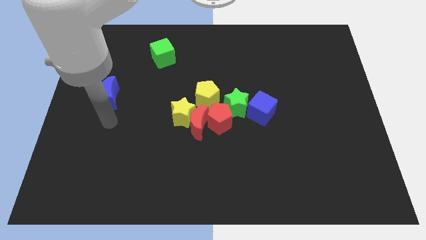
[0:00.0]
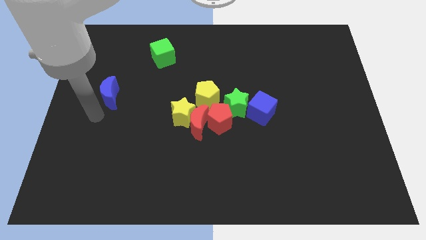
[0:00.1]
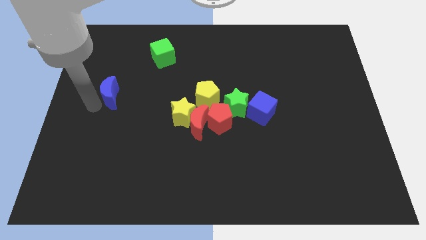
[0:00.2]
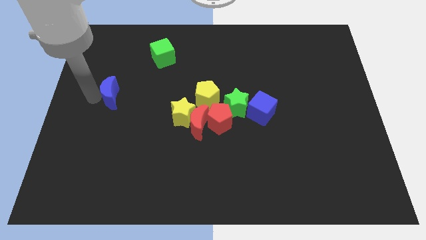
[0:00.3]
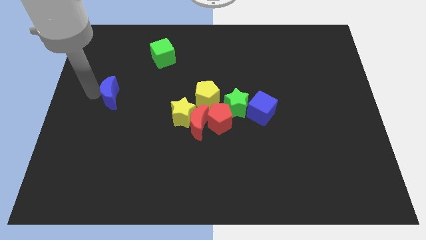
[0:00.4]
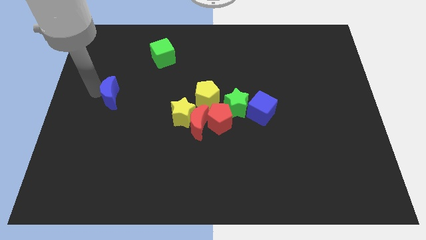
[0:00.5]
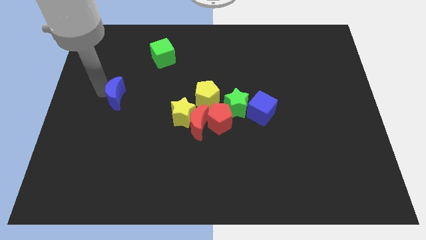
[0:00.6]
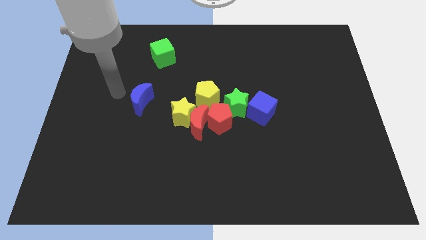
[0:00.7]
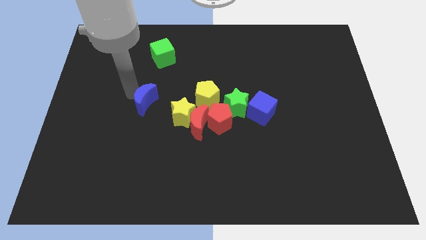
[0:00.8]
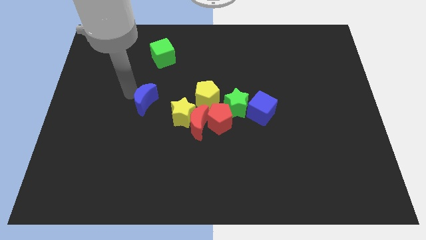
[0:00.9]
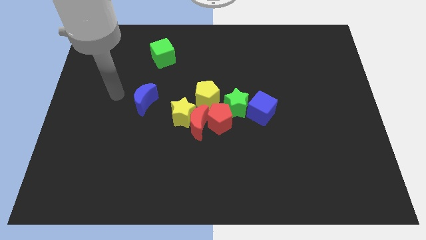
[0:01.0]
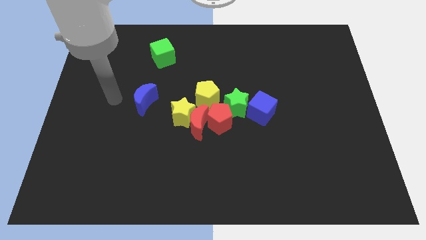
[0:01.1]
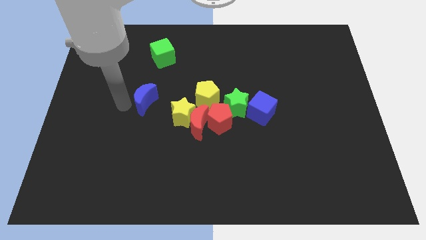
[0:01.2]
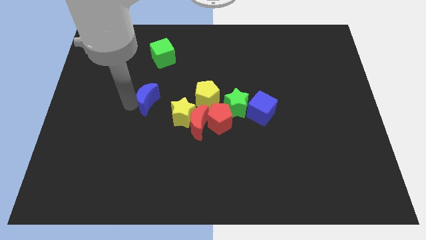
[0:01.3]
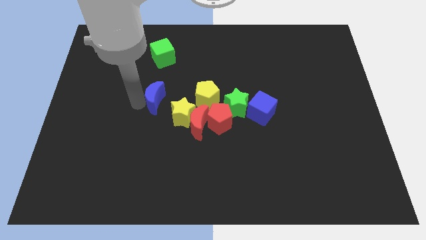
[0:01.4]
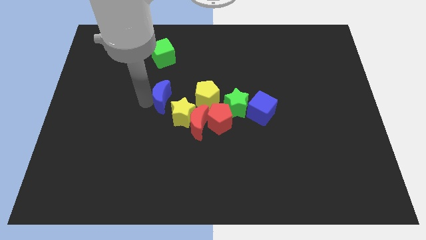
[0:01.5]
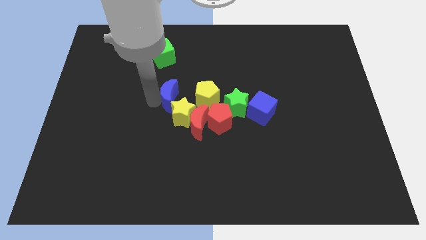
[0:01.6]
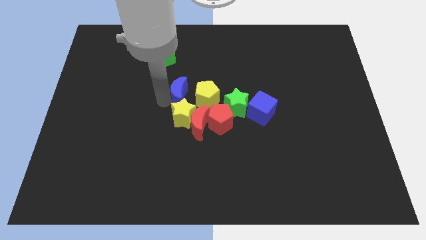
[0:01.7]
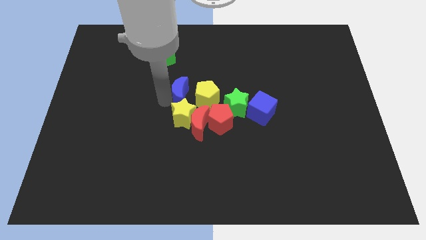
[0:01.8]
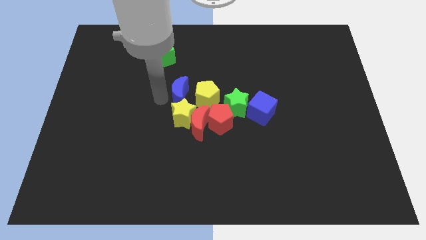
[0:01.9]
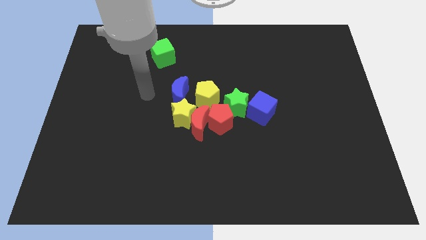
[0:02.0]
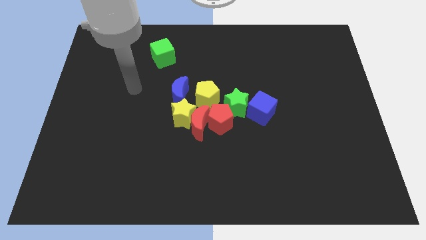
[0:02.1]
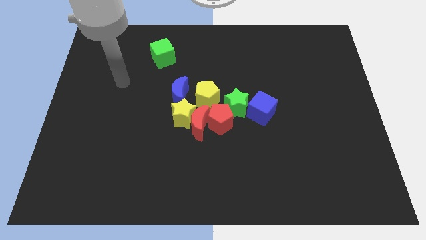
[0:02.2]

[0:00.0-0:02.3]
place the blue moon above yellow star

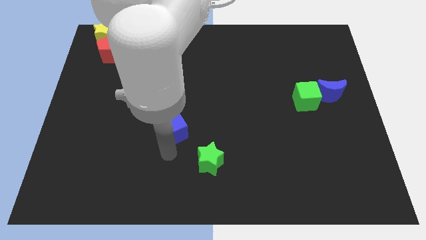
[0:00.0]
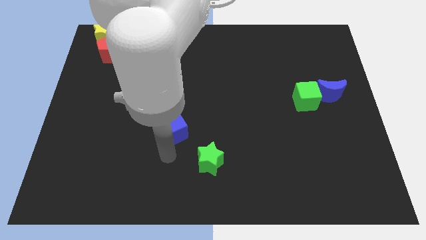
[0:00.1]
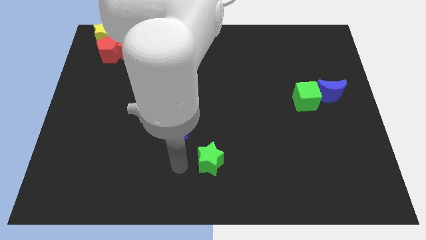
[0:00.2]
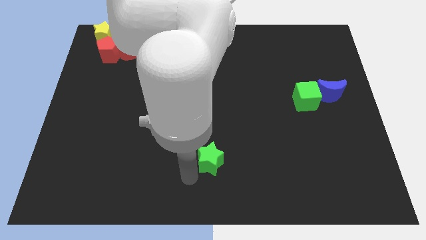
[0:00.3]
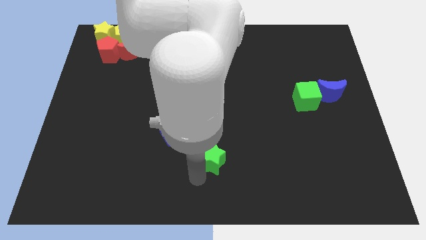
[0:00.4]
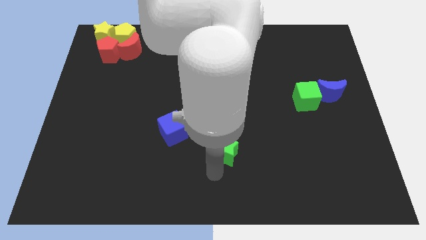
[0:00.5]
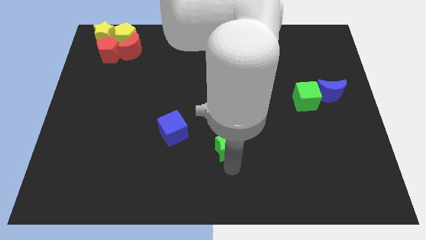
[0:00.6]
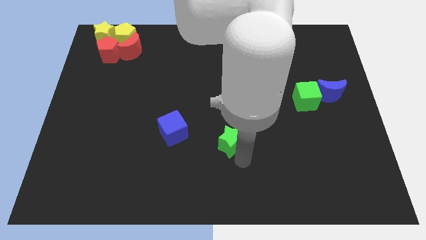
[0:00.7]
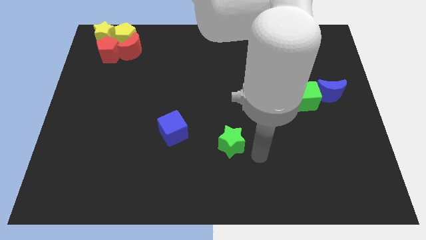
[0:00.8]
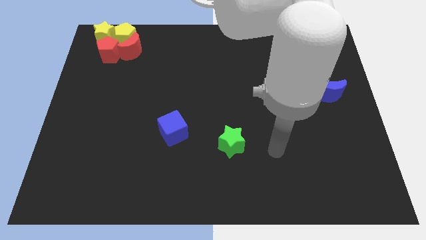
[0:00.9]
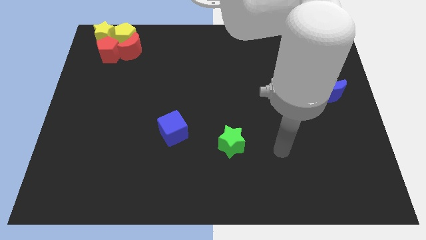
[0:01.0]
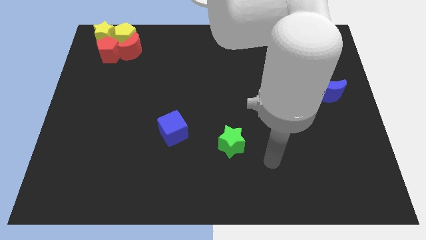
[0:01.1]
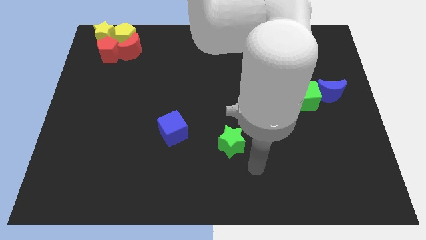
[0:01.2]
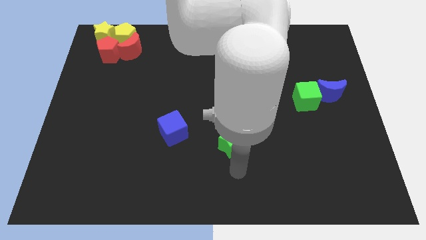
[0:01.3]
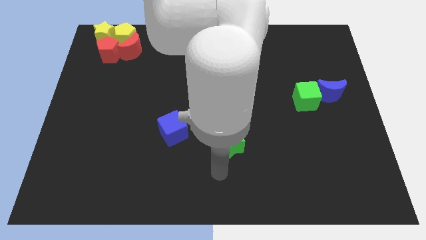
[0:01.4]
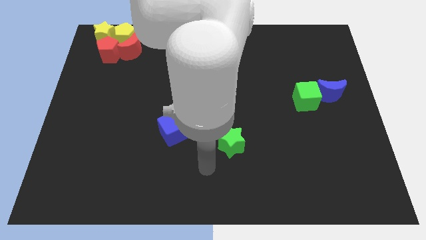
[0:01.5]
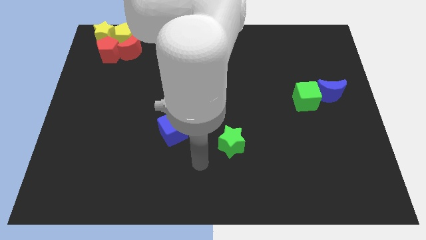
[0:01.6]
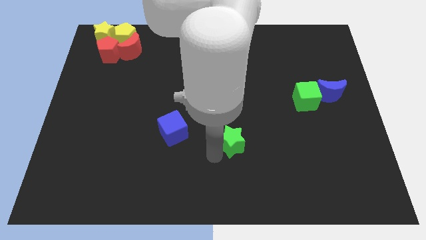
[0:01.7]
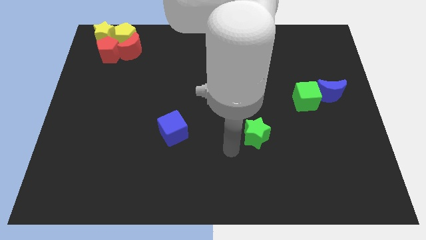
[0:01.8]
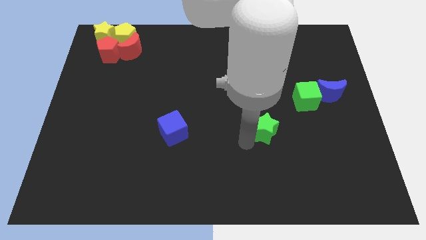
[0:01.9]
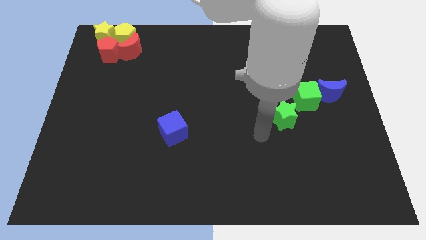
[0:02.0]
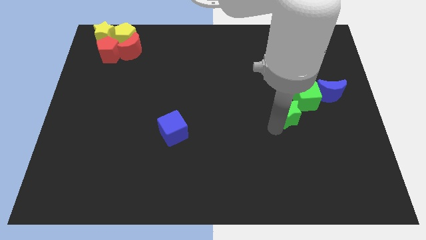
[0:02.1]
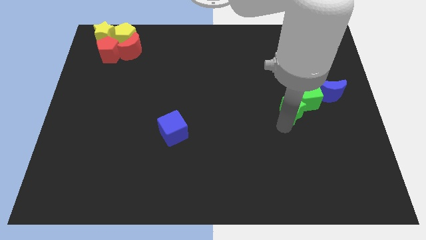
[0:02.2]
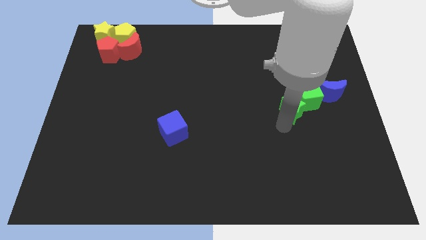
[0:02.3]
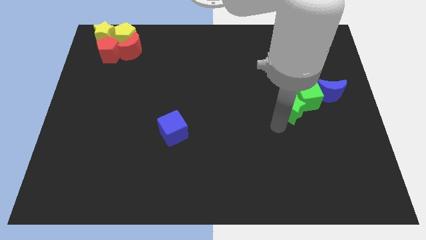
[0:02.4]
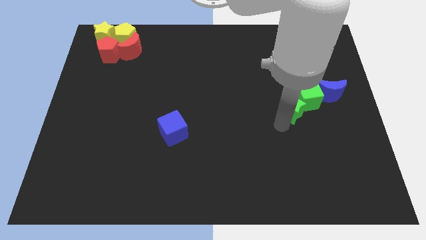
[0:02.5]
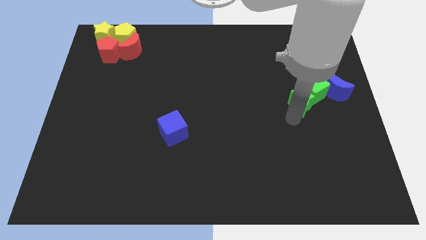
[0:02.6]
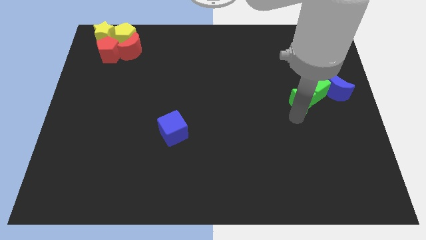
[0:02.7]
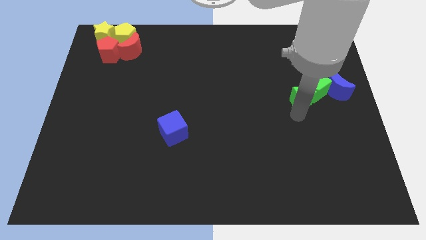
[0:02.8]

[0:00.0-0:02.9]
place the green star to the left side of the green cube

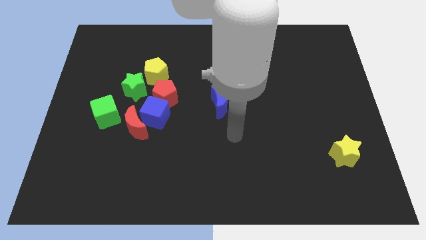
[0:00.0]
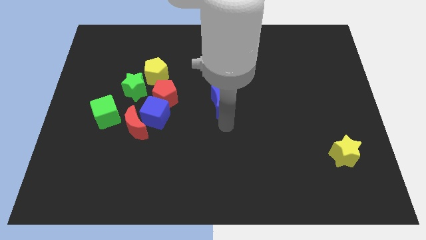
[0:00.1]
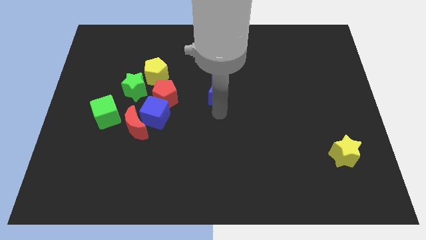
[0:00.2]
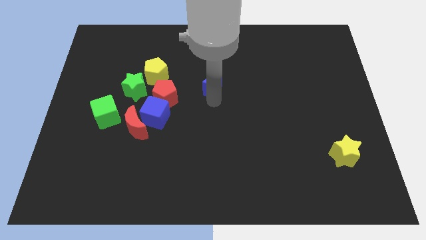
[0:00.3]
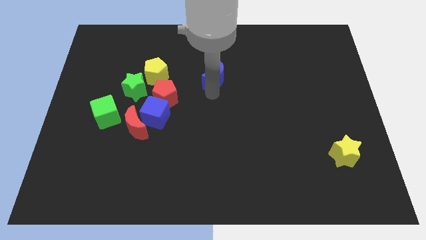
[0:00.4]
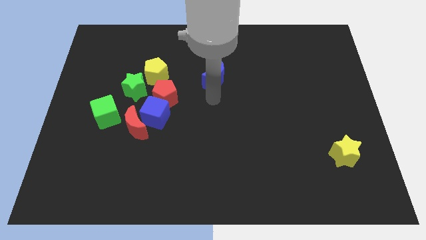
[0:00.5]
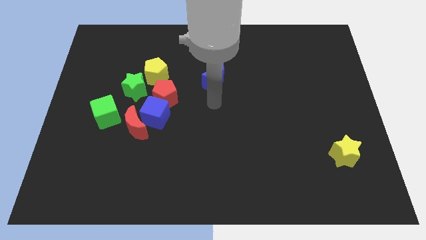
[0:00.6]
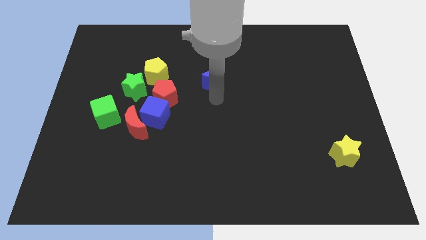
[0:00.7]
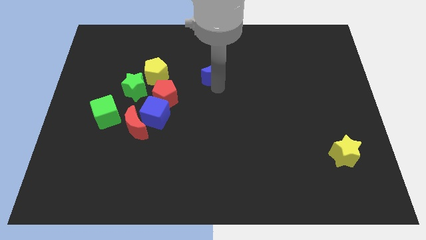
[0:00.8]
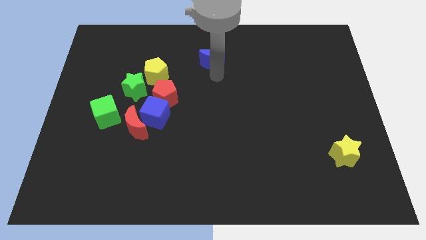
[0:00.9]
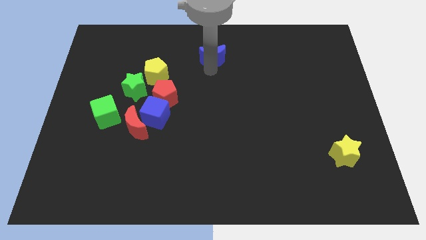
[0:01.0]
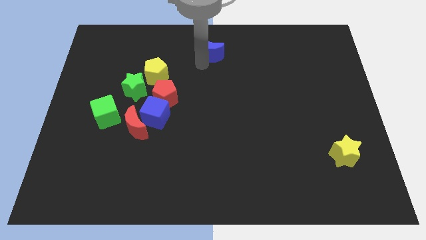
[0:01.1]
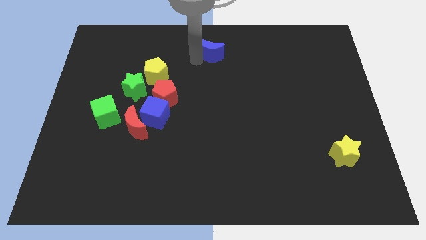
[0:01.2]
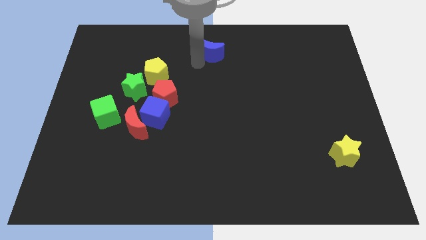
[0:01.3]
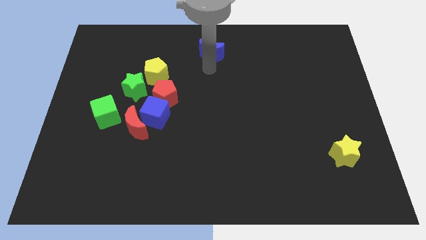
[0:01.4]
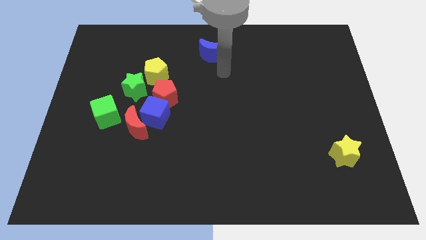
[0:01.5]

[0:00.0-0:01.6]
push the blue crescent towards the top side of the table

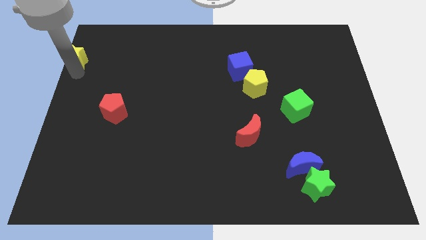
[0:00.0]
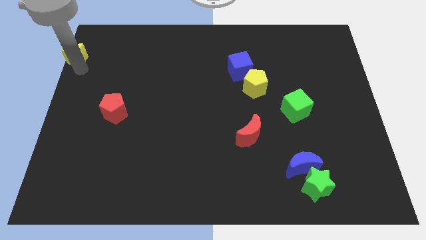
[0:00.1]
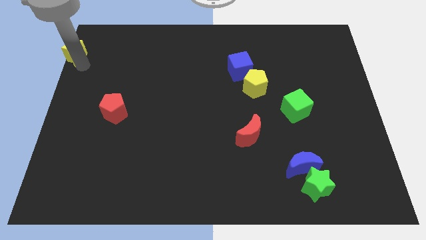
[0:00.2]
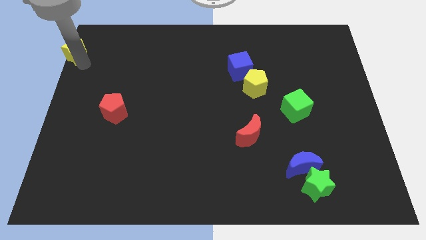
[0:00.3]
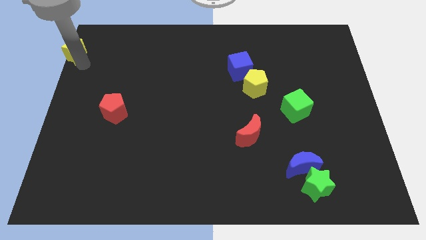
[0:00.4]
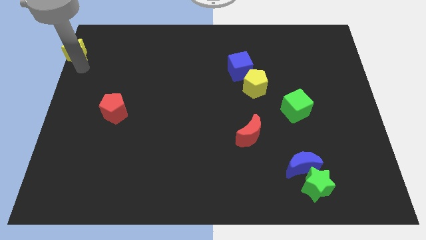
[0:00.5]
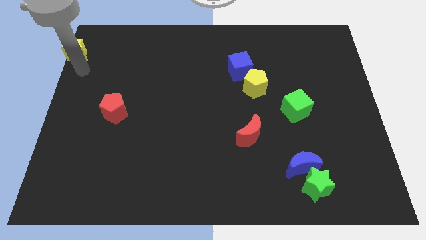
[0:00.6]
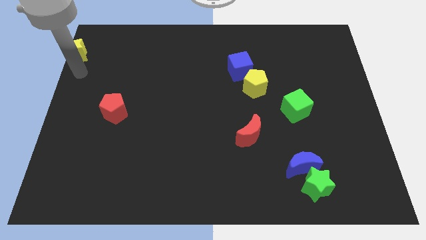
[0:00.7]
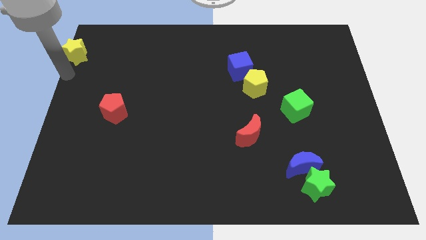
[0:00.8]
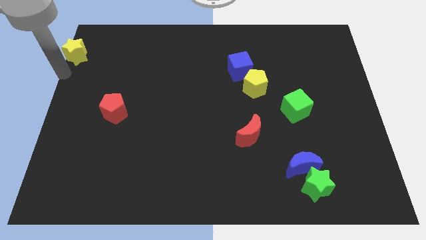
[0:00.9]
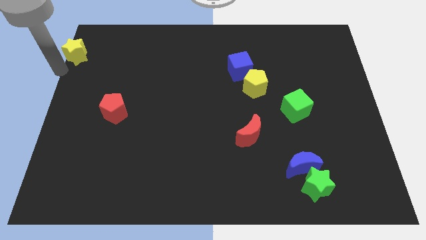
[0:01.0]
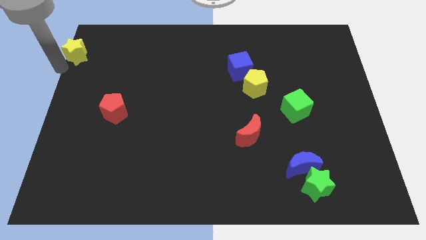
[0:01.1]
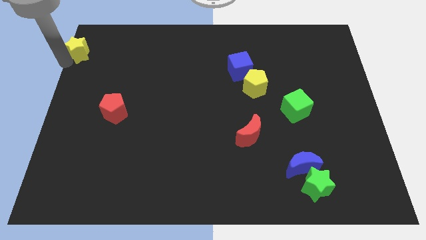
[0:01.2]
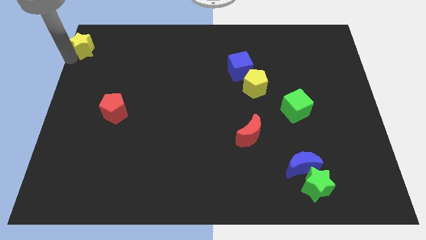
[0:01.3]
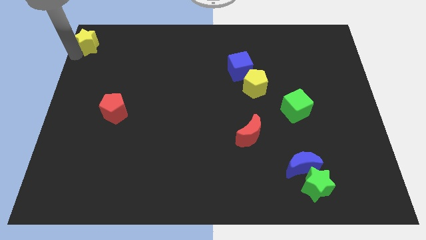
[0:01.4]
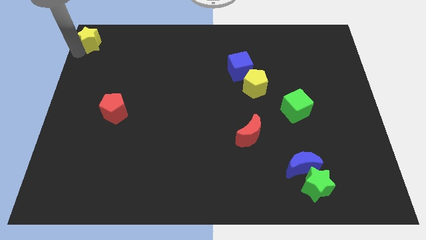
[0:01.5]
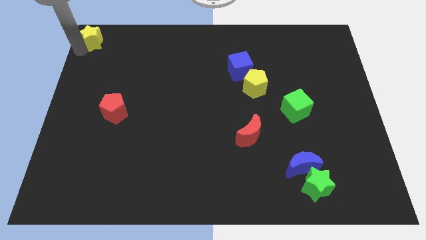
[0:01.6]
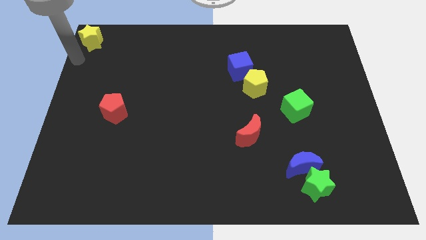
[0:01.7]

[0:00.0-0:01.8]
push the yellow star to the top left of the board

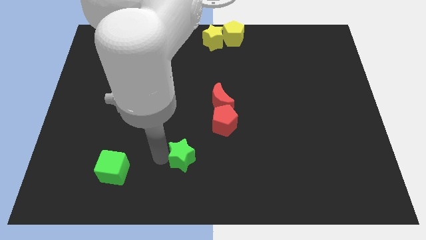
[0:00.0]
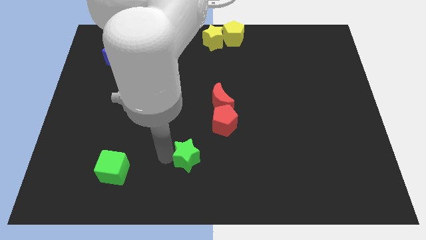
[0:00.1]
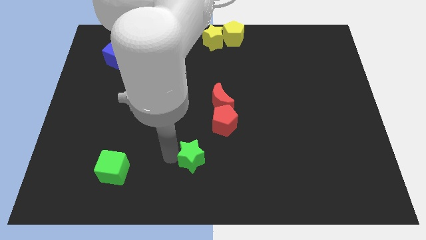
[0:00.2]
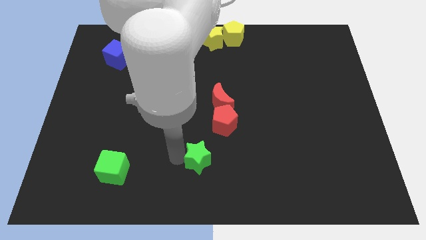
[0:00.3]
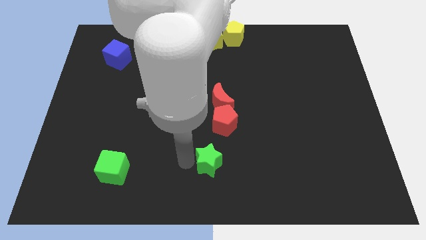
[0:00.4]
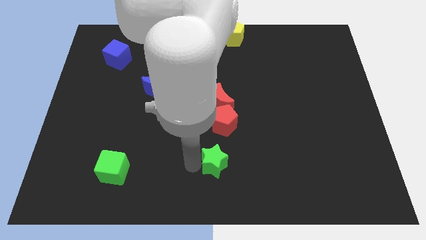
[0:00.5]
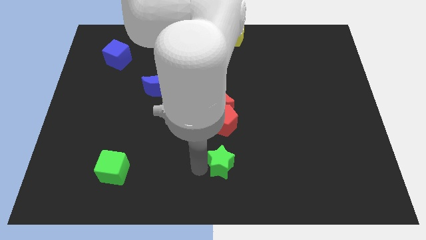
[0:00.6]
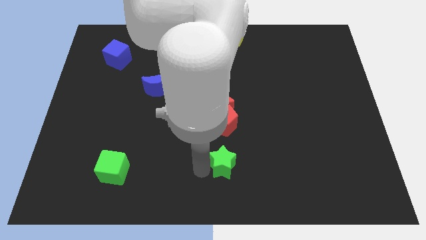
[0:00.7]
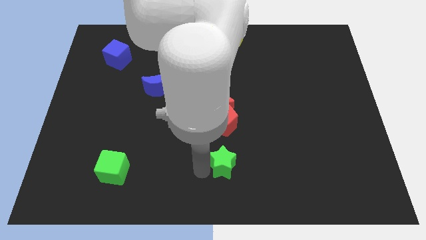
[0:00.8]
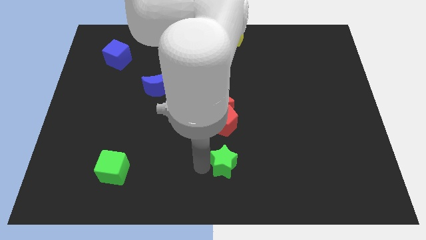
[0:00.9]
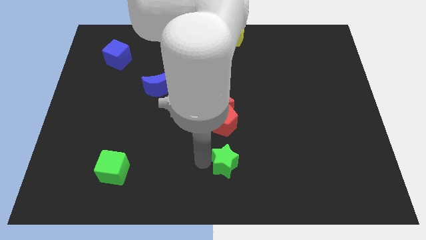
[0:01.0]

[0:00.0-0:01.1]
place the green star below the red pentagon
